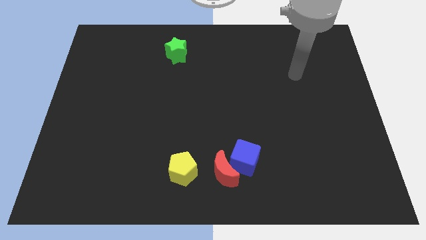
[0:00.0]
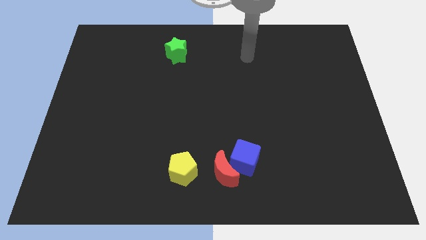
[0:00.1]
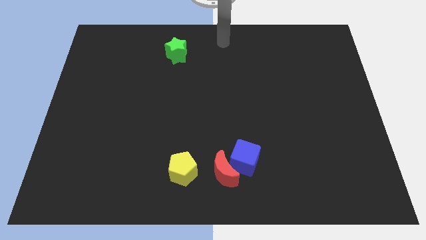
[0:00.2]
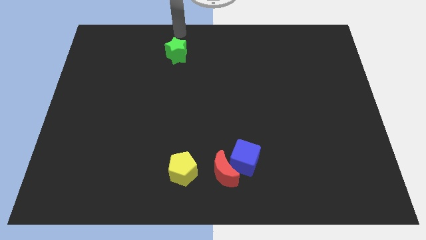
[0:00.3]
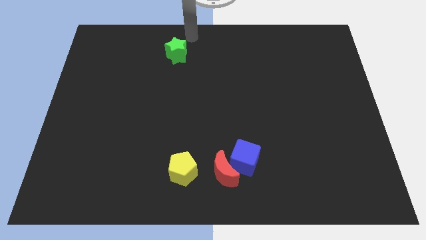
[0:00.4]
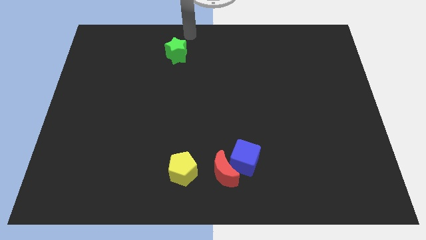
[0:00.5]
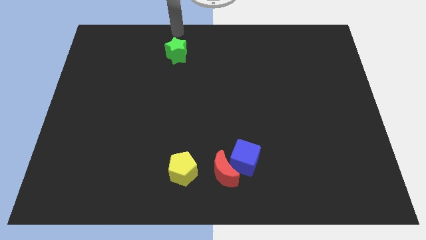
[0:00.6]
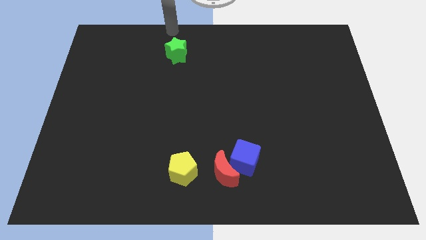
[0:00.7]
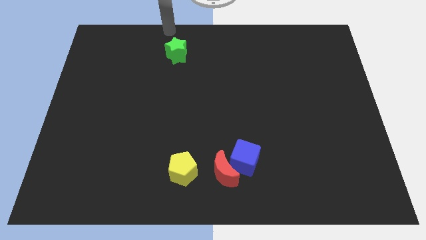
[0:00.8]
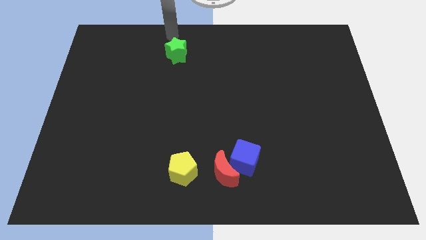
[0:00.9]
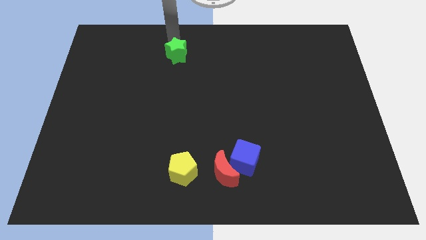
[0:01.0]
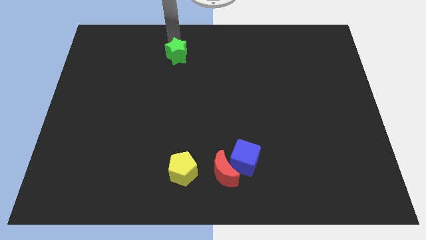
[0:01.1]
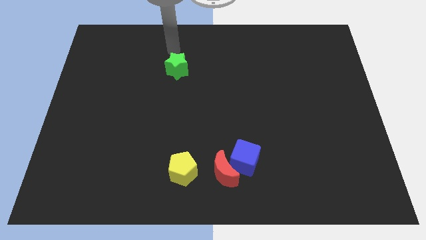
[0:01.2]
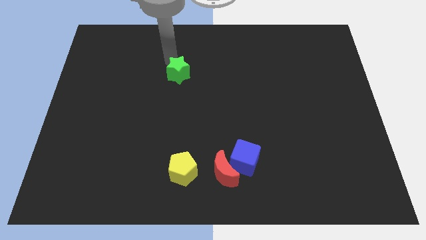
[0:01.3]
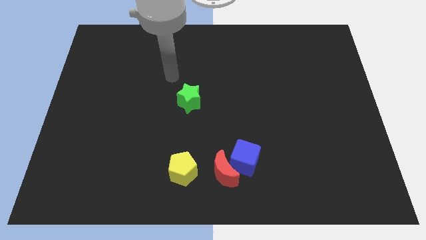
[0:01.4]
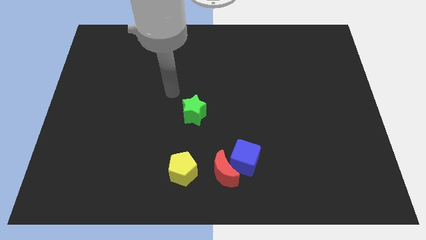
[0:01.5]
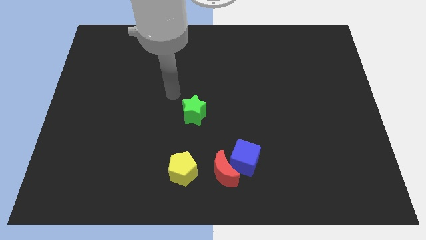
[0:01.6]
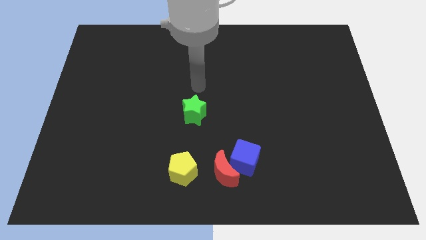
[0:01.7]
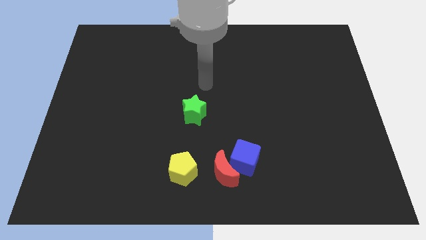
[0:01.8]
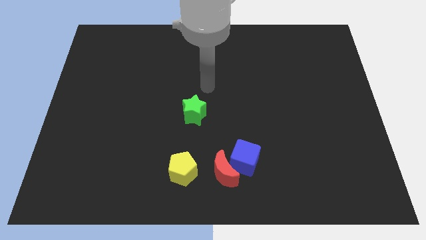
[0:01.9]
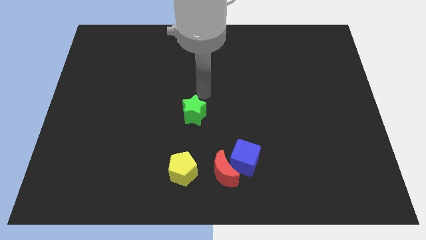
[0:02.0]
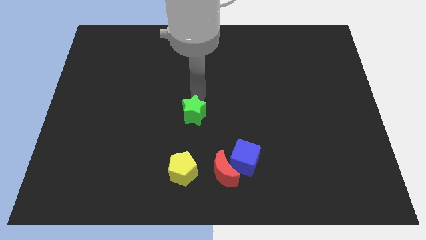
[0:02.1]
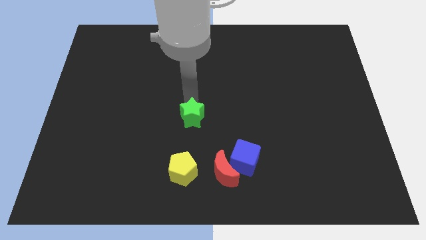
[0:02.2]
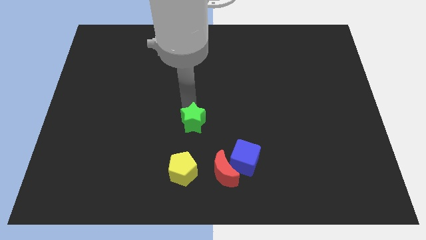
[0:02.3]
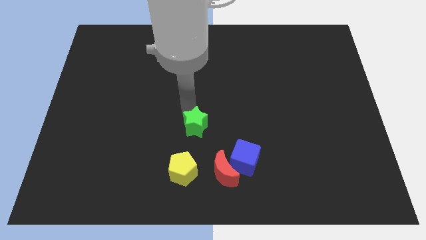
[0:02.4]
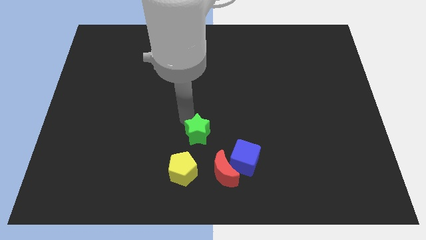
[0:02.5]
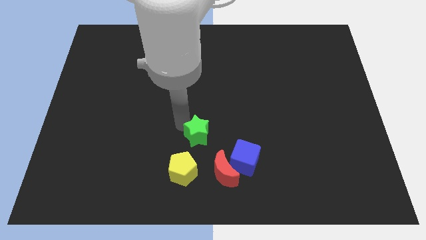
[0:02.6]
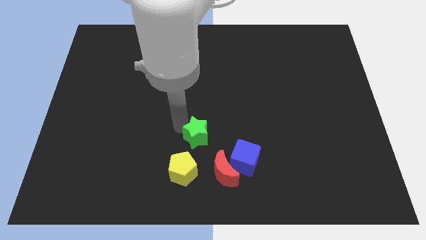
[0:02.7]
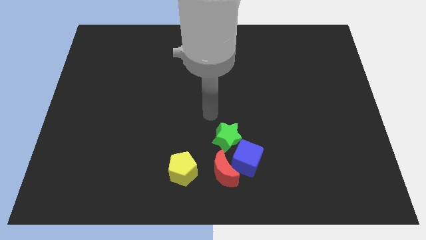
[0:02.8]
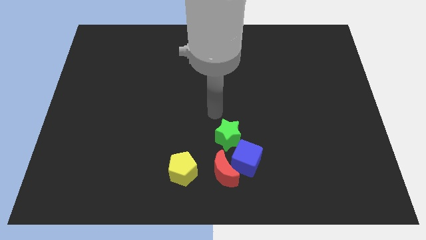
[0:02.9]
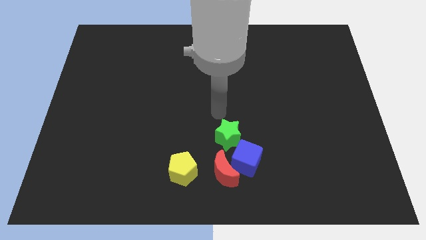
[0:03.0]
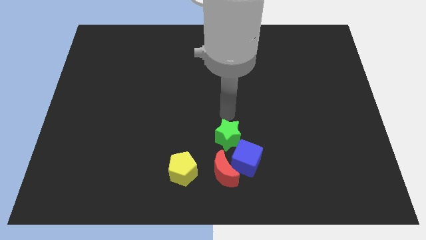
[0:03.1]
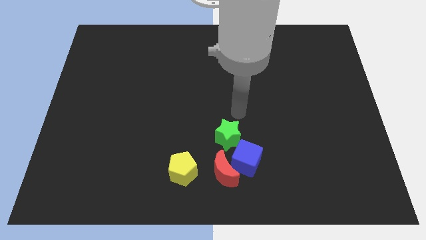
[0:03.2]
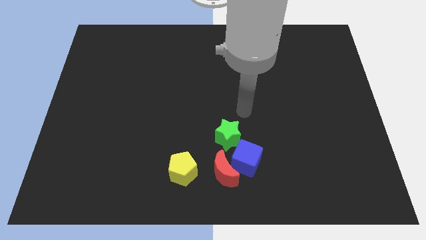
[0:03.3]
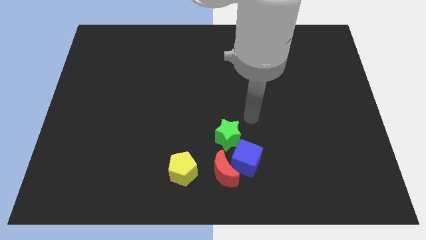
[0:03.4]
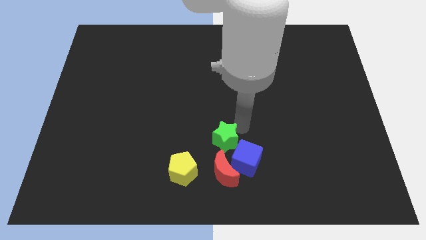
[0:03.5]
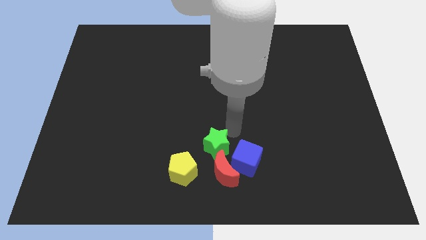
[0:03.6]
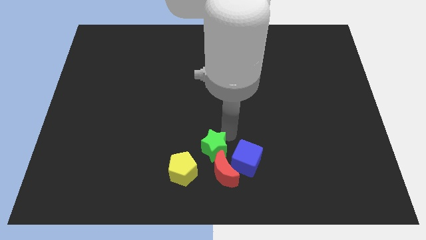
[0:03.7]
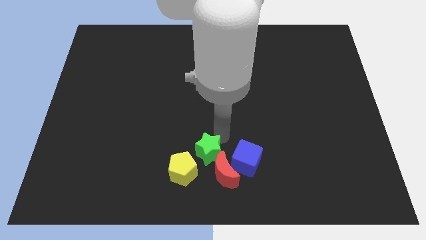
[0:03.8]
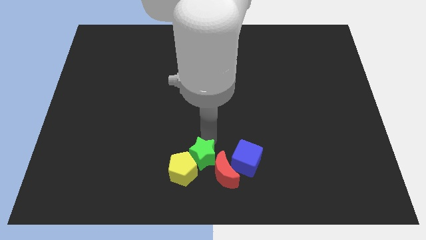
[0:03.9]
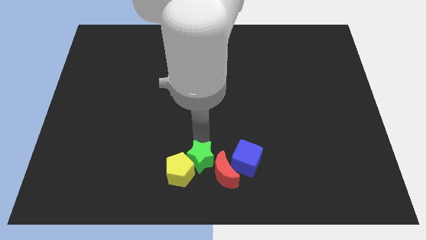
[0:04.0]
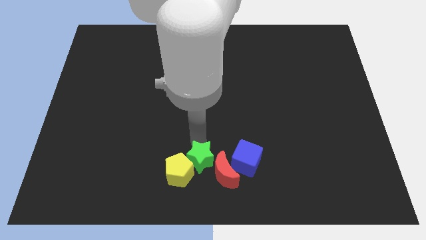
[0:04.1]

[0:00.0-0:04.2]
slide the star next to the pentagon

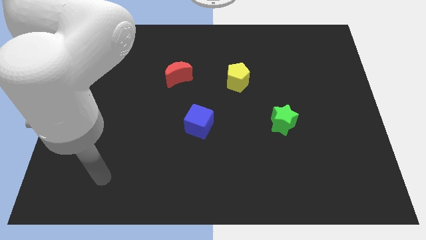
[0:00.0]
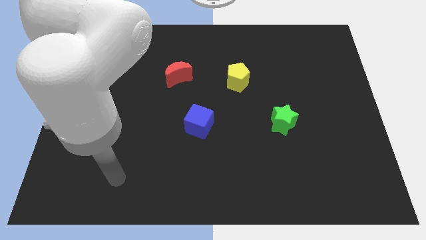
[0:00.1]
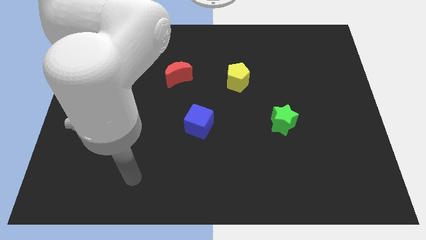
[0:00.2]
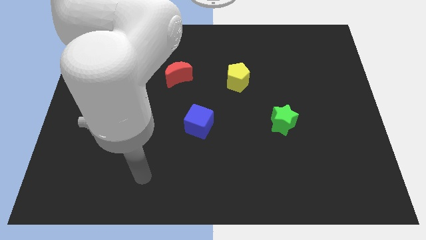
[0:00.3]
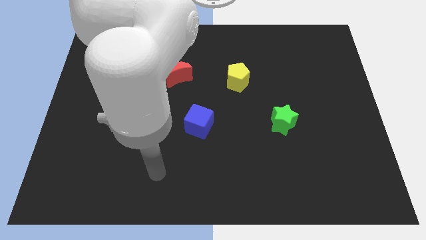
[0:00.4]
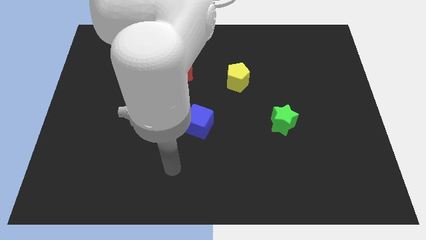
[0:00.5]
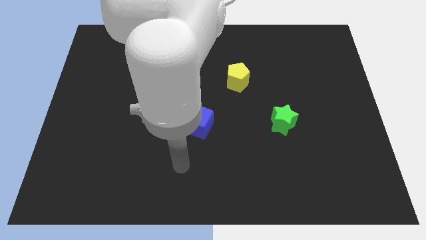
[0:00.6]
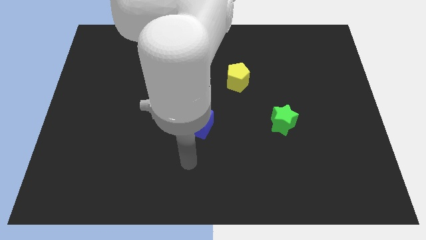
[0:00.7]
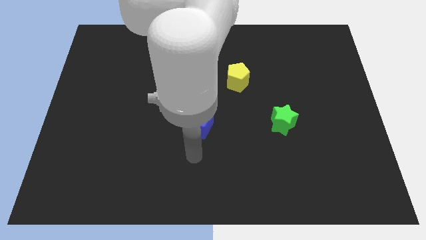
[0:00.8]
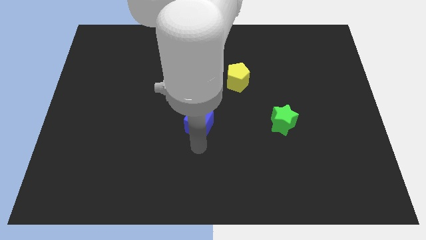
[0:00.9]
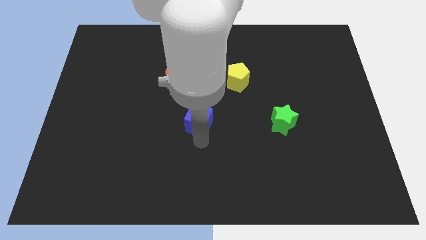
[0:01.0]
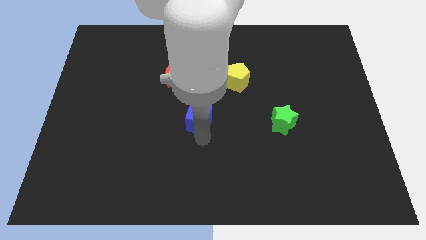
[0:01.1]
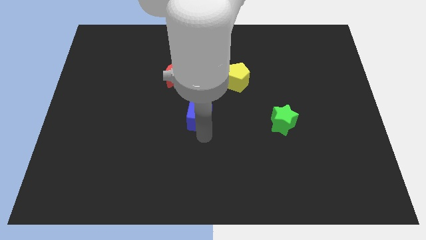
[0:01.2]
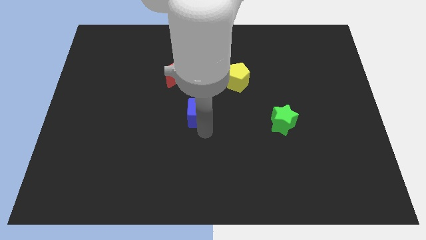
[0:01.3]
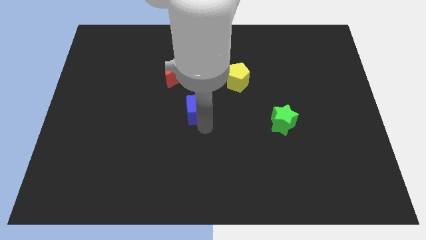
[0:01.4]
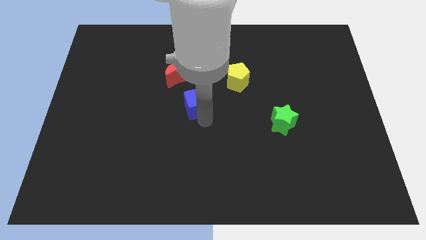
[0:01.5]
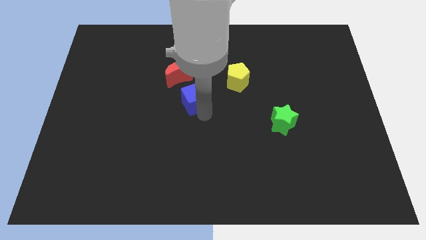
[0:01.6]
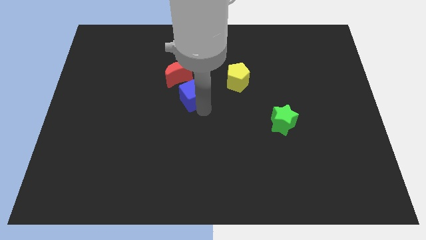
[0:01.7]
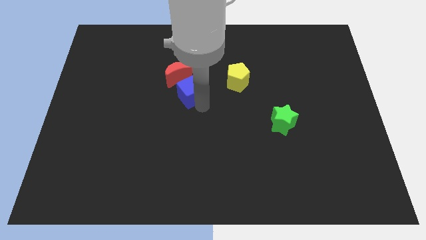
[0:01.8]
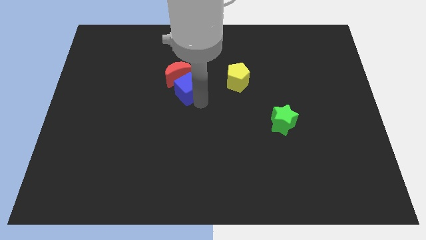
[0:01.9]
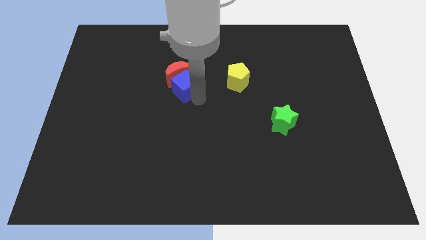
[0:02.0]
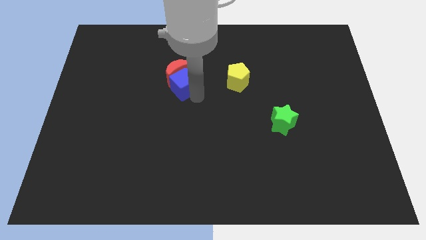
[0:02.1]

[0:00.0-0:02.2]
slide the blue block to the red moon

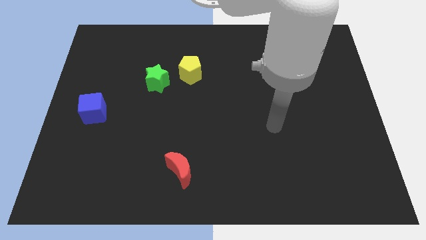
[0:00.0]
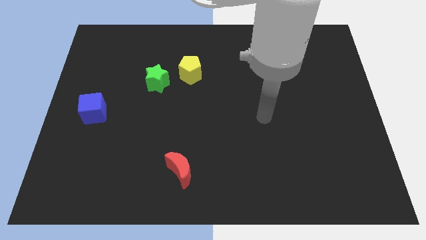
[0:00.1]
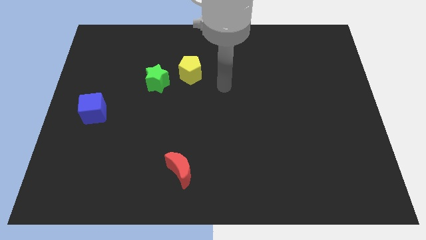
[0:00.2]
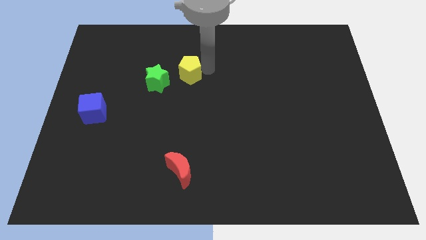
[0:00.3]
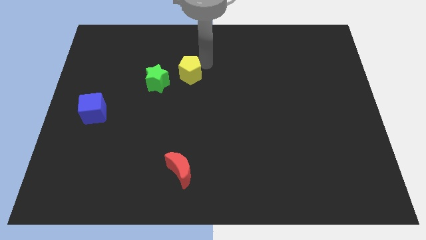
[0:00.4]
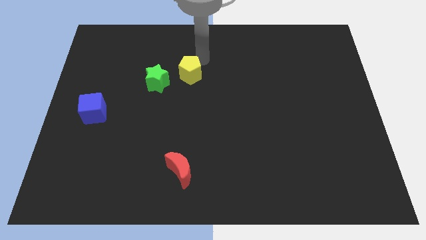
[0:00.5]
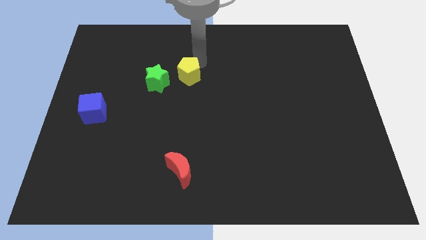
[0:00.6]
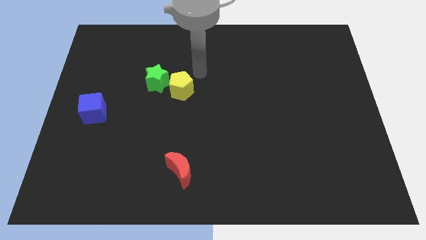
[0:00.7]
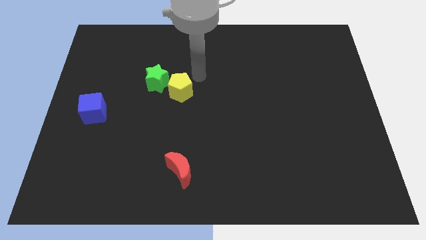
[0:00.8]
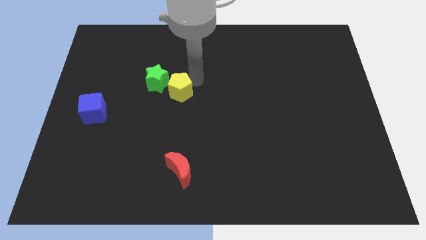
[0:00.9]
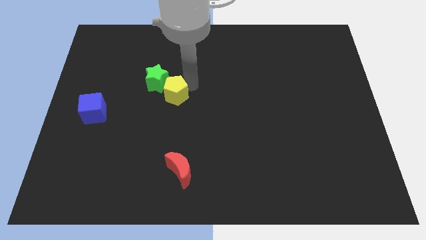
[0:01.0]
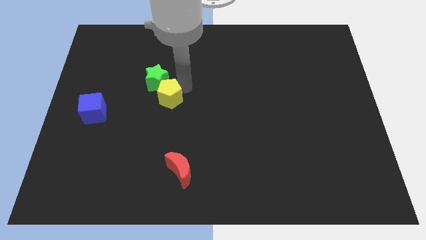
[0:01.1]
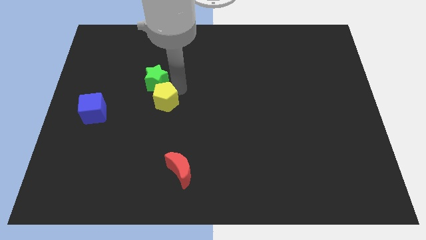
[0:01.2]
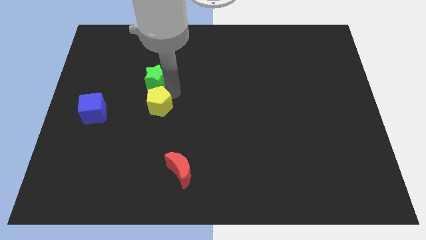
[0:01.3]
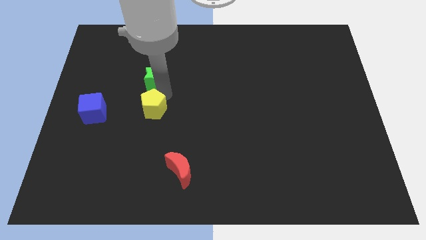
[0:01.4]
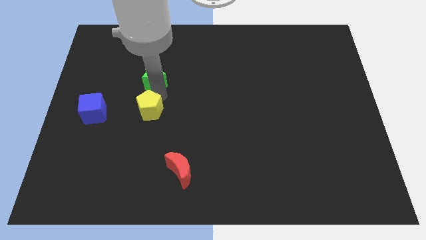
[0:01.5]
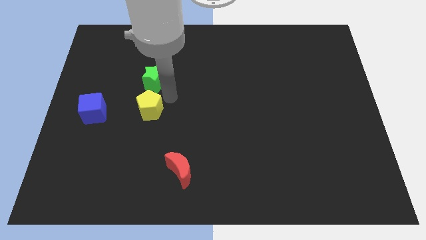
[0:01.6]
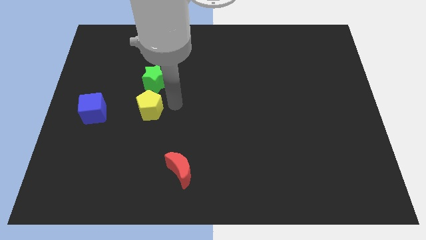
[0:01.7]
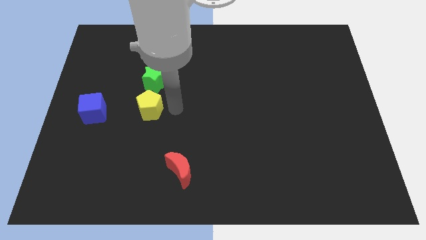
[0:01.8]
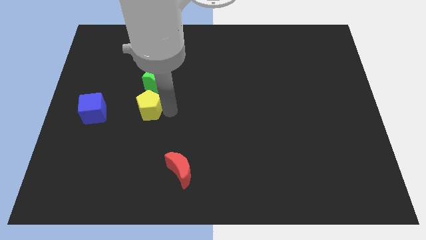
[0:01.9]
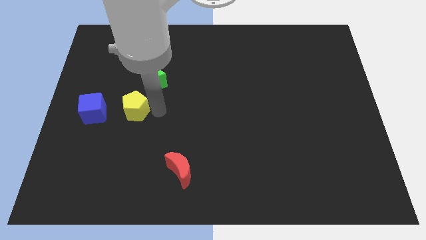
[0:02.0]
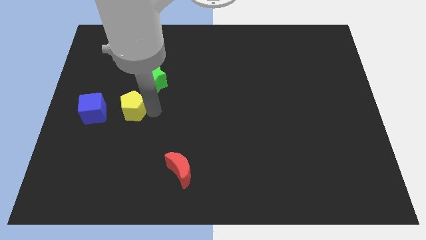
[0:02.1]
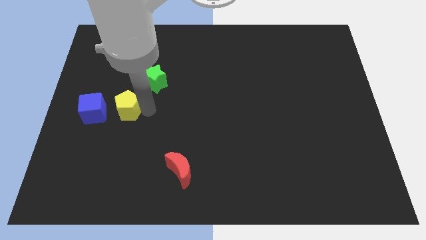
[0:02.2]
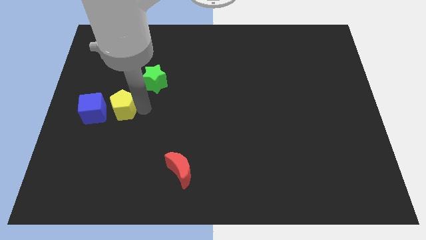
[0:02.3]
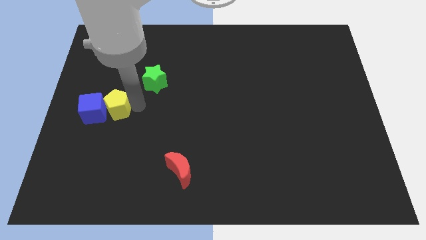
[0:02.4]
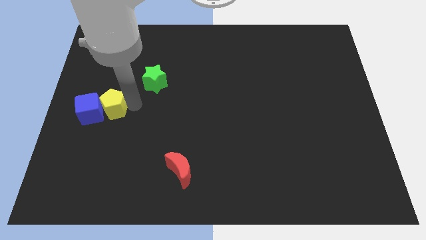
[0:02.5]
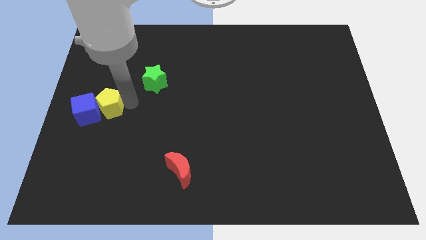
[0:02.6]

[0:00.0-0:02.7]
slide the yellow pentagon towards the blue block
